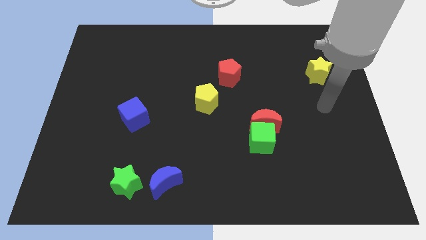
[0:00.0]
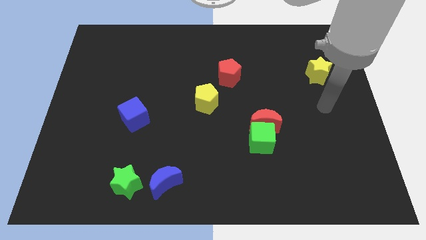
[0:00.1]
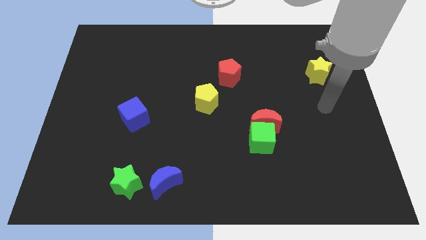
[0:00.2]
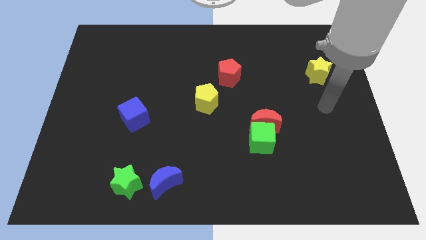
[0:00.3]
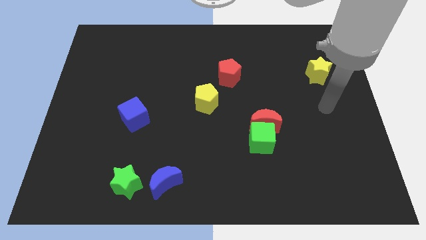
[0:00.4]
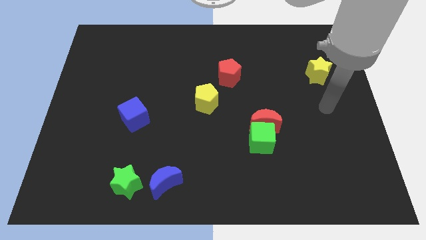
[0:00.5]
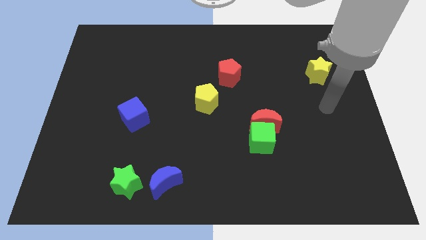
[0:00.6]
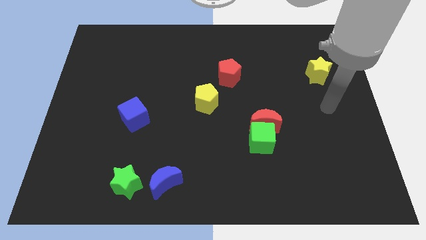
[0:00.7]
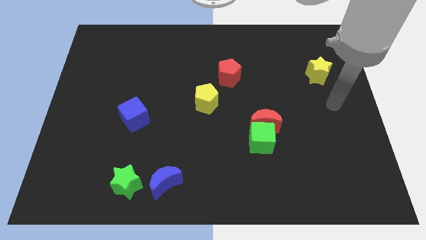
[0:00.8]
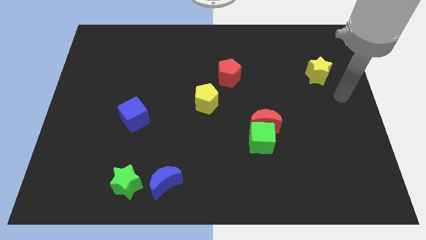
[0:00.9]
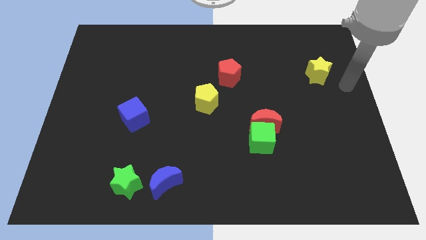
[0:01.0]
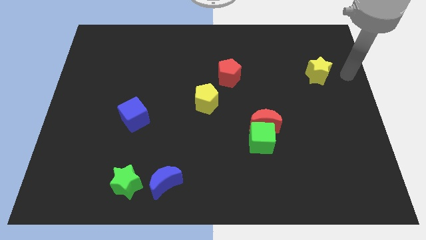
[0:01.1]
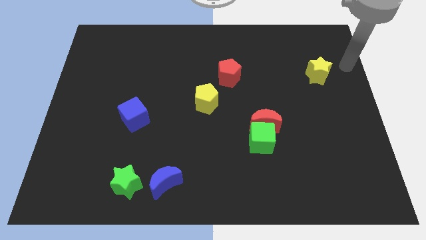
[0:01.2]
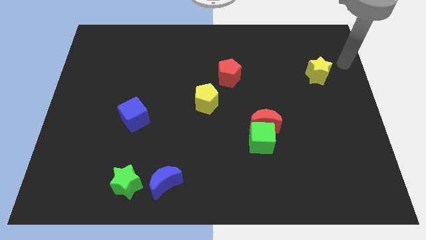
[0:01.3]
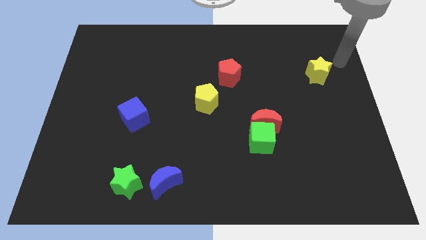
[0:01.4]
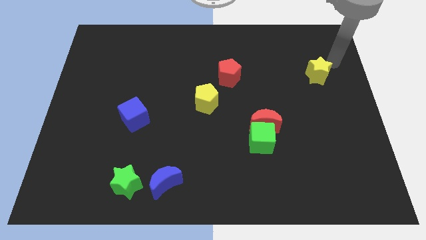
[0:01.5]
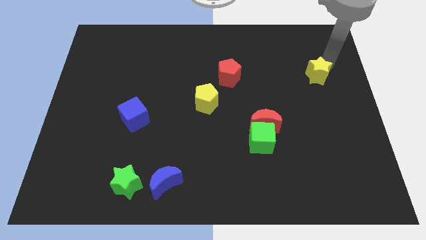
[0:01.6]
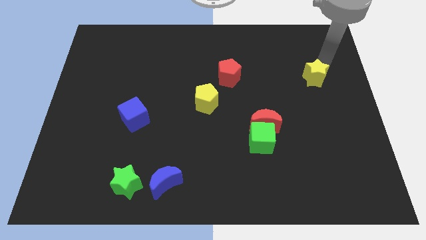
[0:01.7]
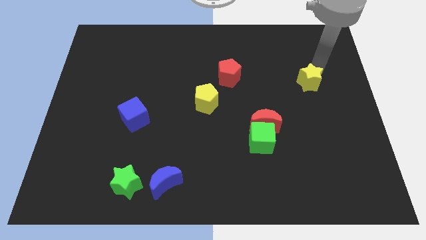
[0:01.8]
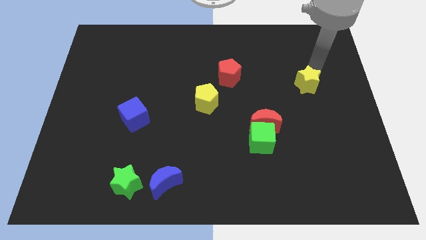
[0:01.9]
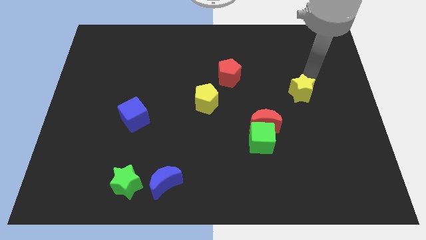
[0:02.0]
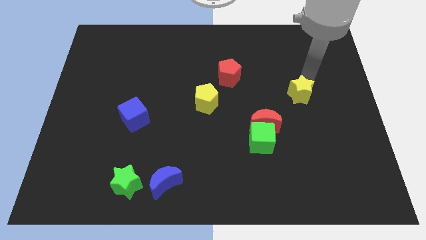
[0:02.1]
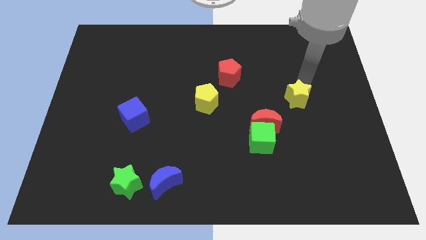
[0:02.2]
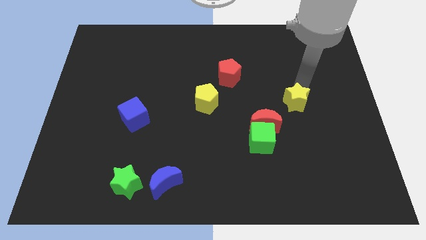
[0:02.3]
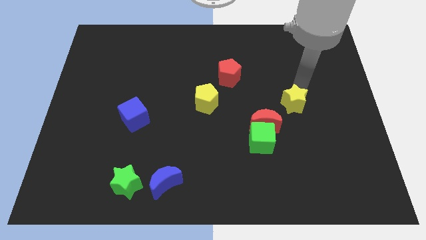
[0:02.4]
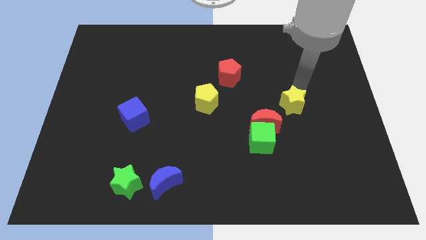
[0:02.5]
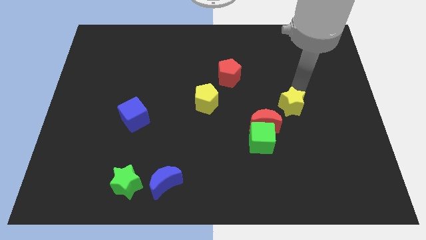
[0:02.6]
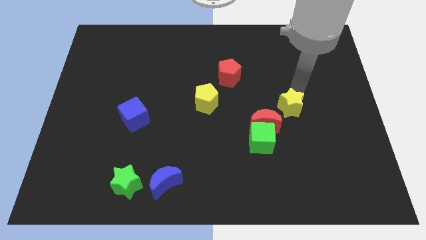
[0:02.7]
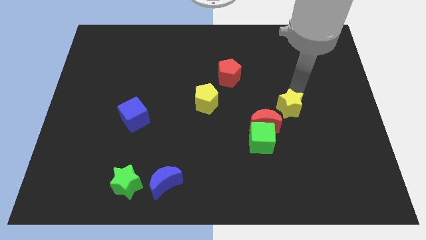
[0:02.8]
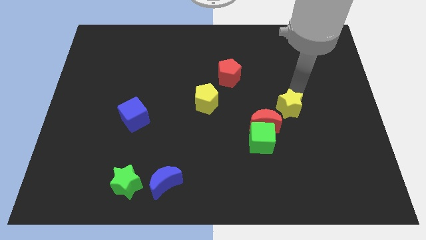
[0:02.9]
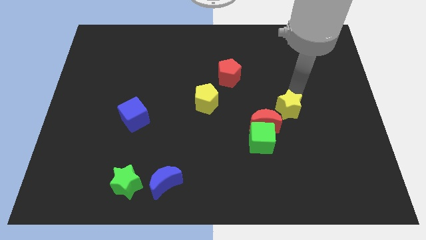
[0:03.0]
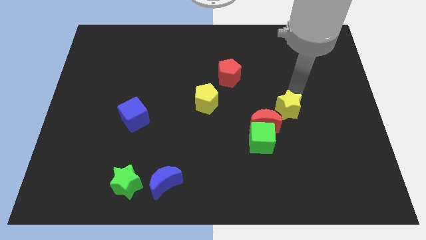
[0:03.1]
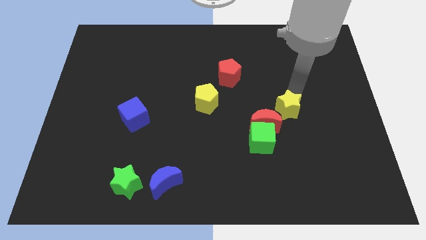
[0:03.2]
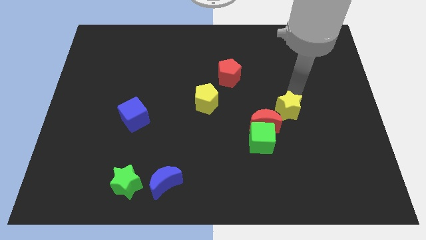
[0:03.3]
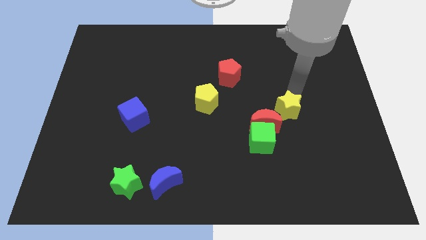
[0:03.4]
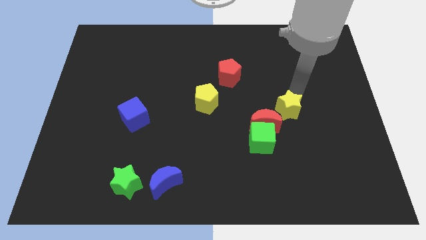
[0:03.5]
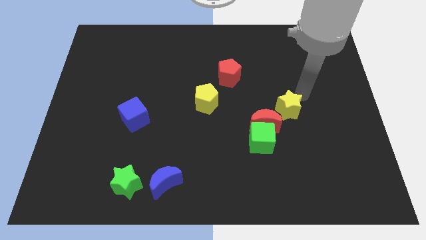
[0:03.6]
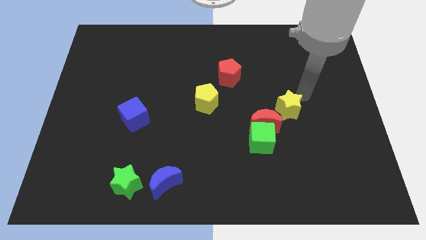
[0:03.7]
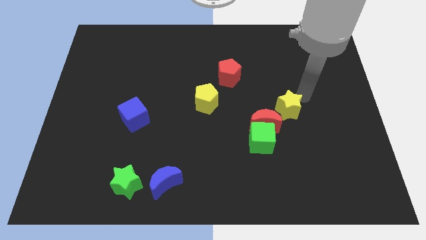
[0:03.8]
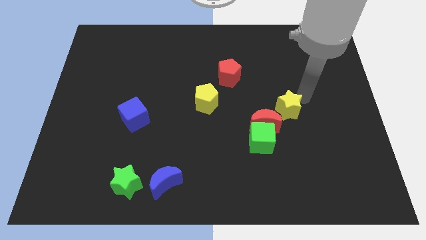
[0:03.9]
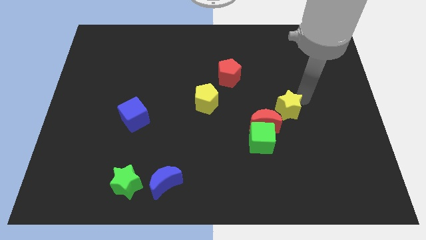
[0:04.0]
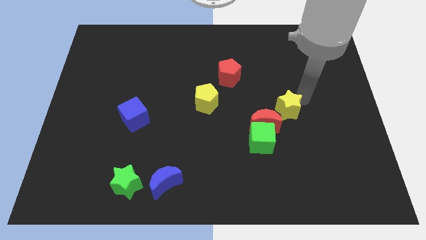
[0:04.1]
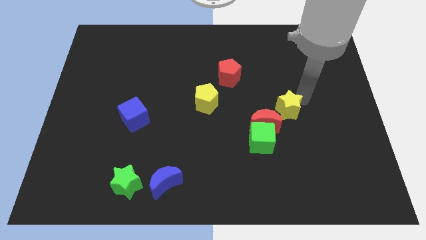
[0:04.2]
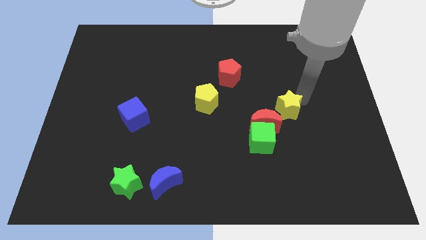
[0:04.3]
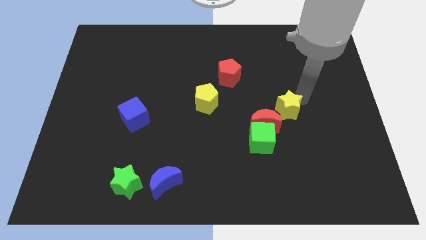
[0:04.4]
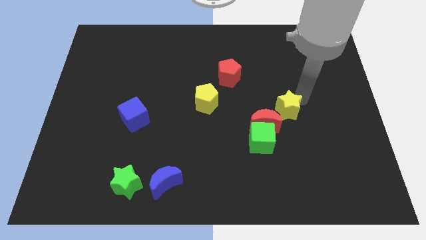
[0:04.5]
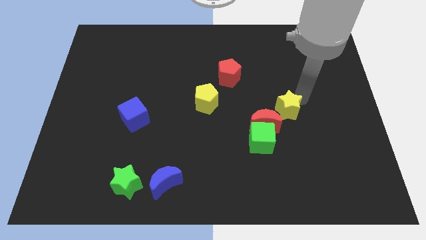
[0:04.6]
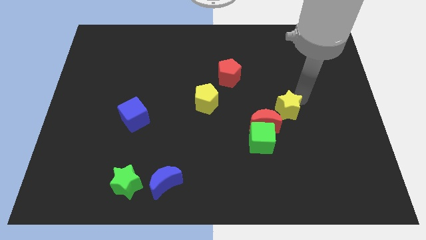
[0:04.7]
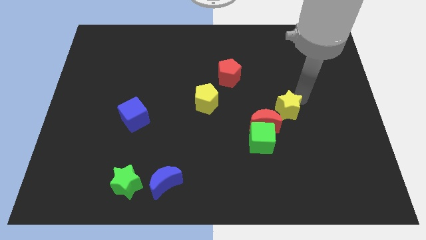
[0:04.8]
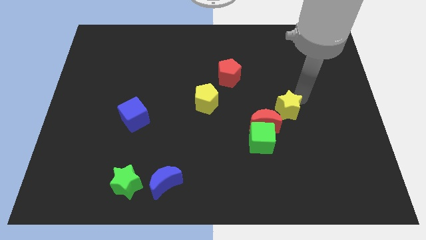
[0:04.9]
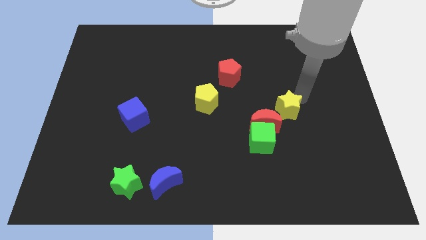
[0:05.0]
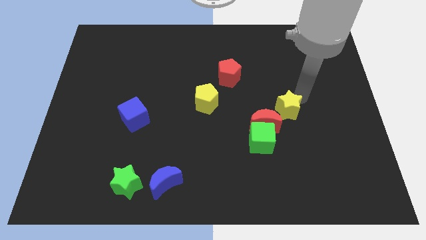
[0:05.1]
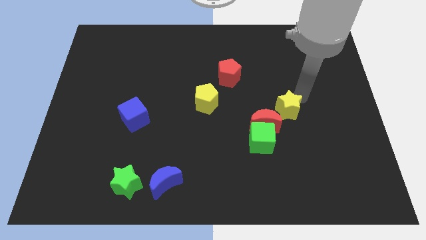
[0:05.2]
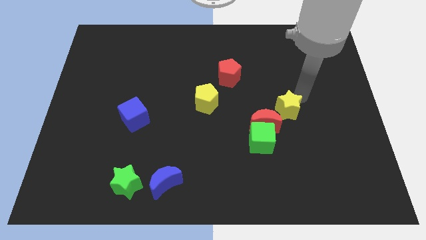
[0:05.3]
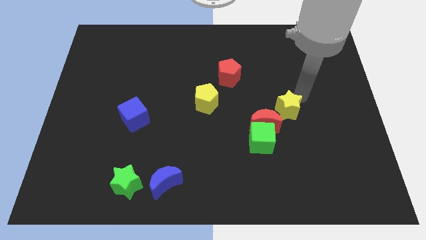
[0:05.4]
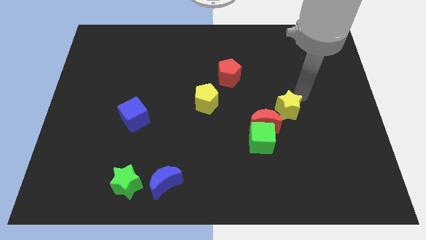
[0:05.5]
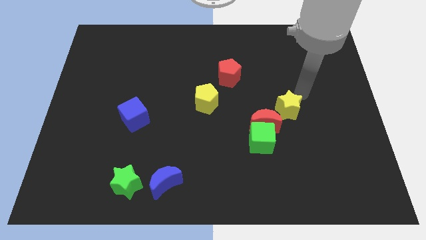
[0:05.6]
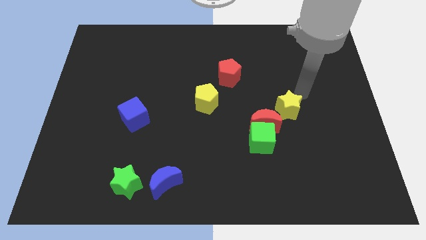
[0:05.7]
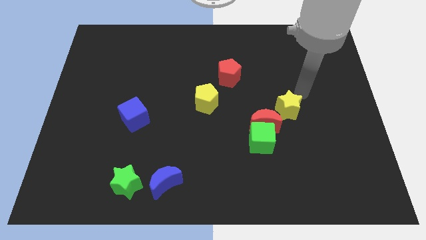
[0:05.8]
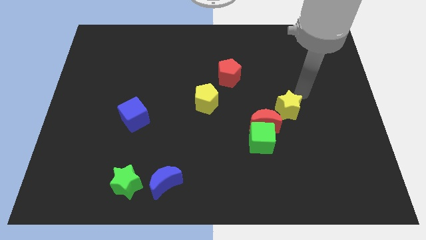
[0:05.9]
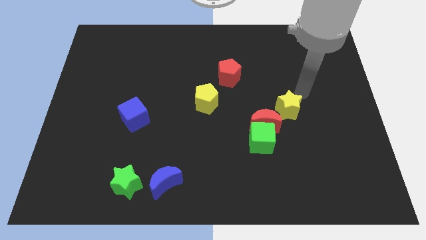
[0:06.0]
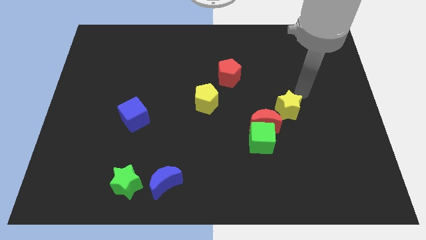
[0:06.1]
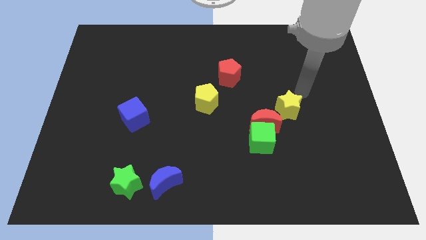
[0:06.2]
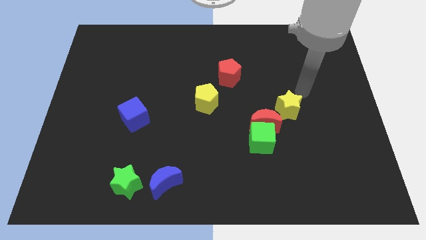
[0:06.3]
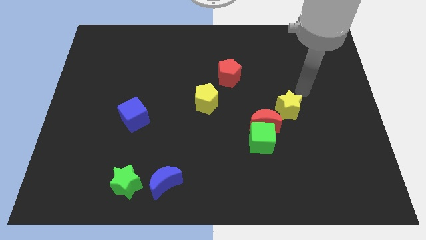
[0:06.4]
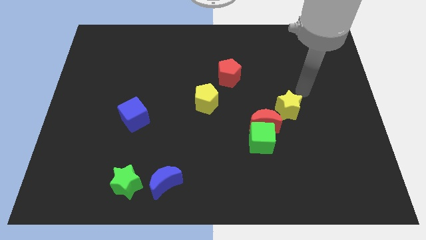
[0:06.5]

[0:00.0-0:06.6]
place the yellow star at the top right side of the red moon

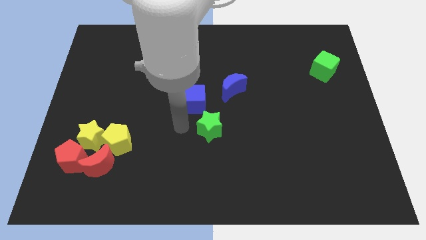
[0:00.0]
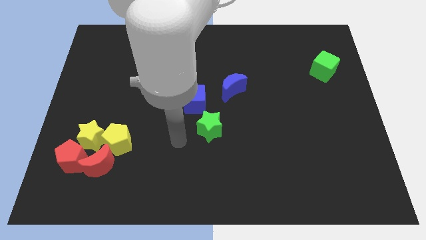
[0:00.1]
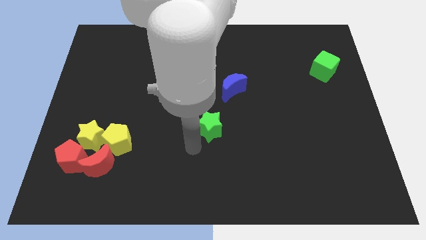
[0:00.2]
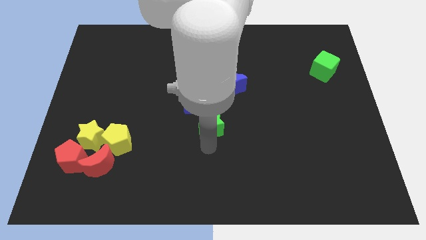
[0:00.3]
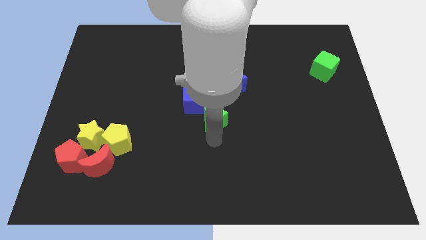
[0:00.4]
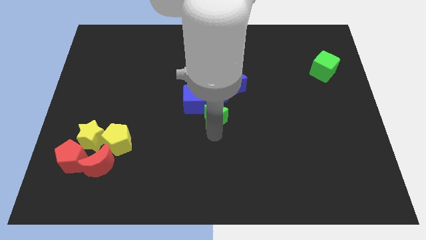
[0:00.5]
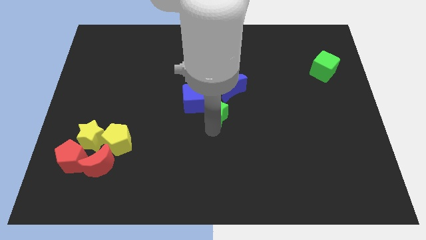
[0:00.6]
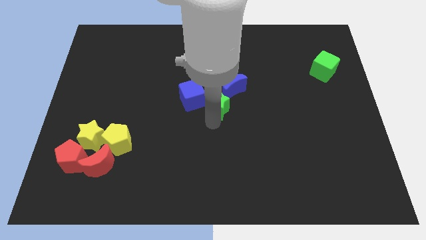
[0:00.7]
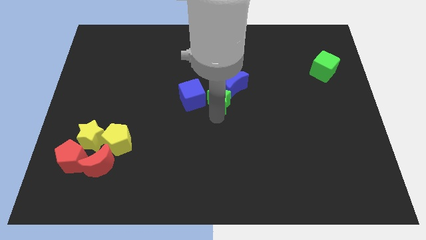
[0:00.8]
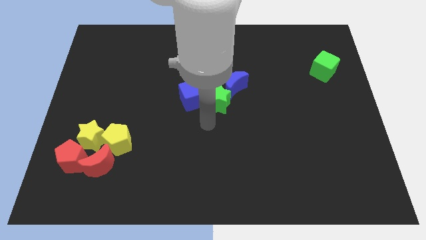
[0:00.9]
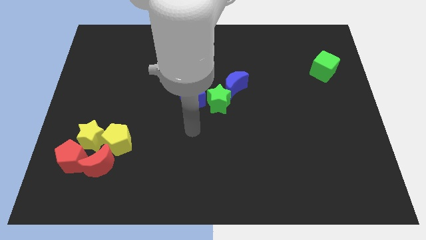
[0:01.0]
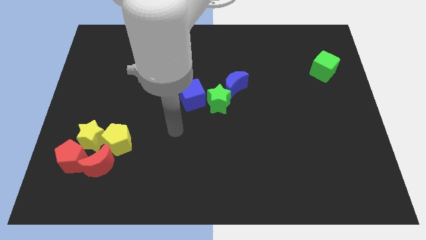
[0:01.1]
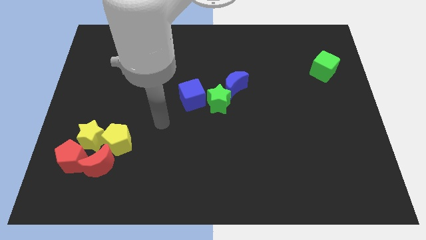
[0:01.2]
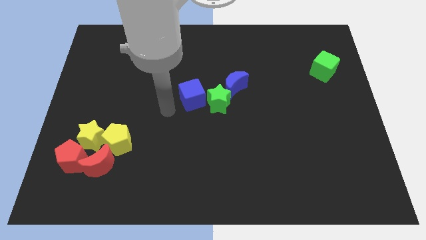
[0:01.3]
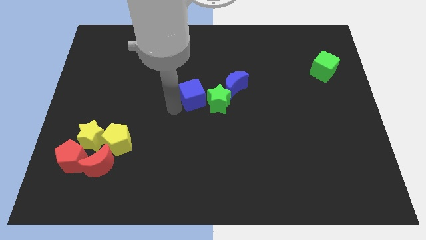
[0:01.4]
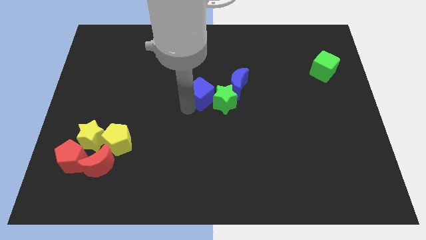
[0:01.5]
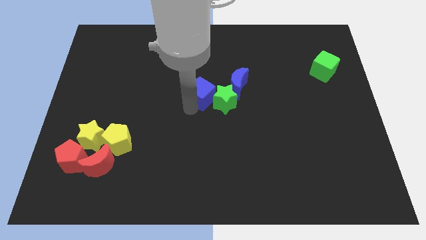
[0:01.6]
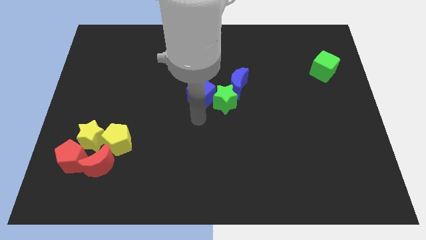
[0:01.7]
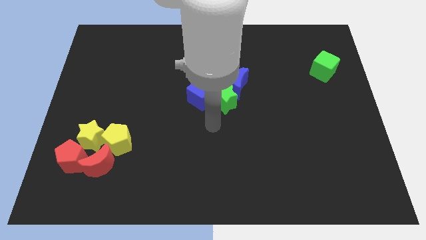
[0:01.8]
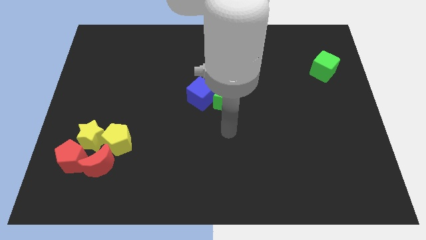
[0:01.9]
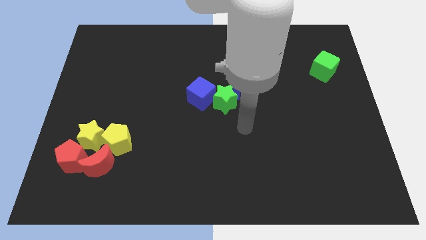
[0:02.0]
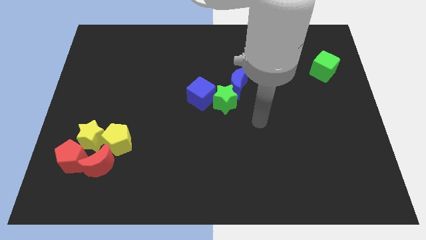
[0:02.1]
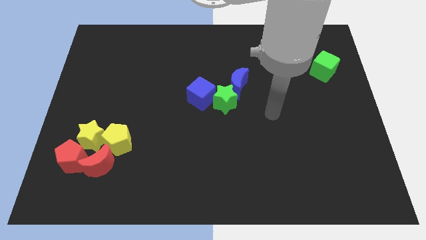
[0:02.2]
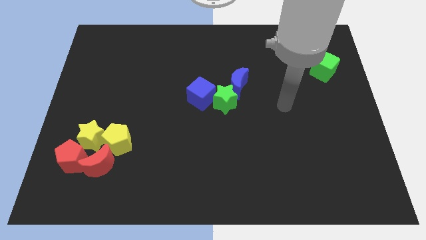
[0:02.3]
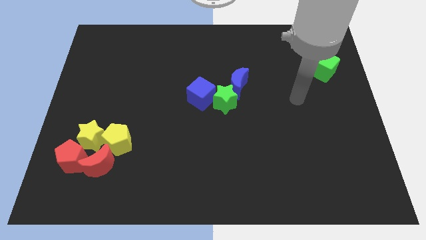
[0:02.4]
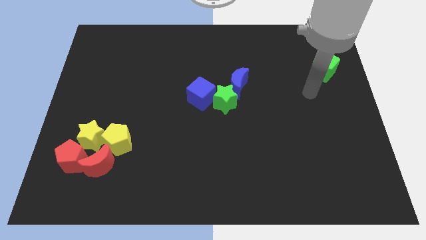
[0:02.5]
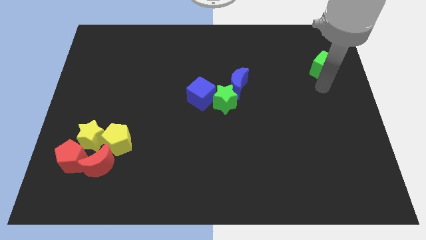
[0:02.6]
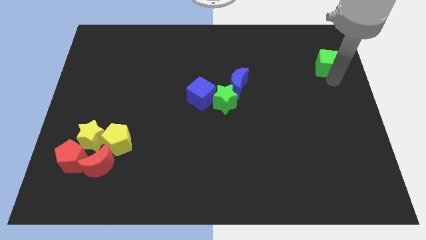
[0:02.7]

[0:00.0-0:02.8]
push the green star and blue cube into the blue crescent
